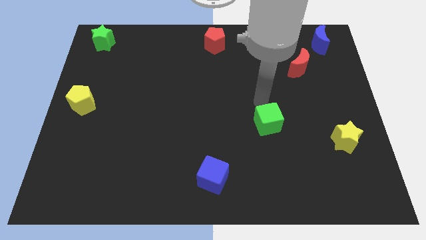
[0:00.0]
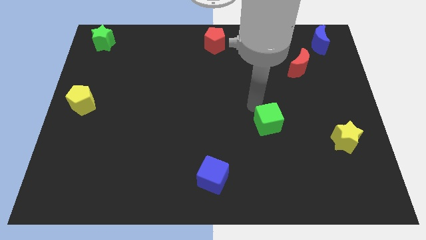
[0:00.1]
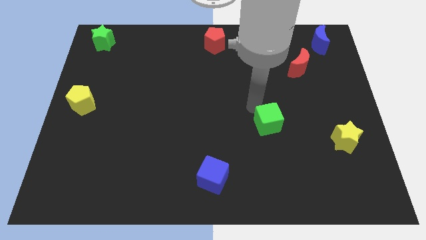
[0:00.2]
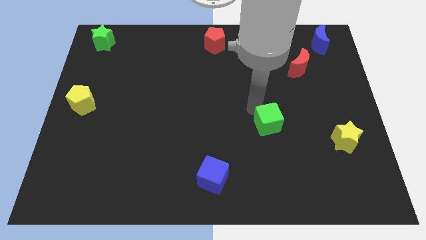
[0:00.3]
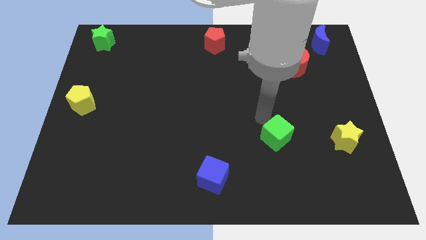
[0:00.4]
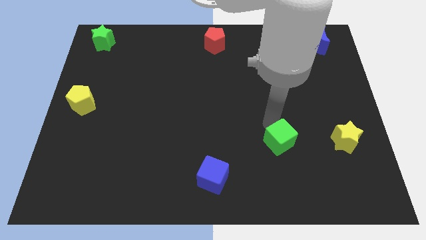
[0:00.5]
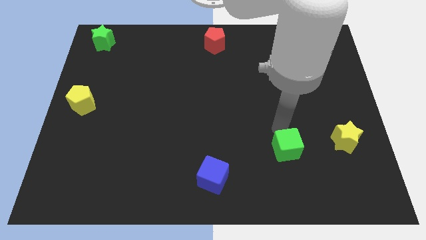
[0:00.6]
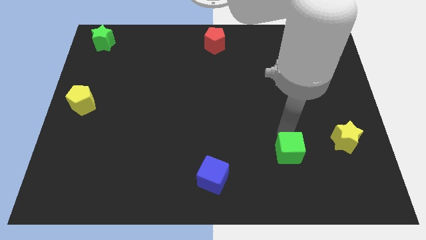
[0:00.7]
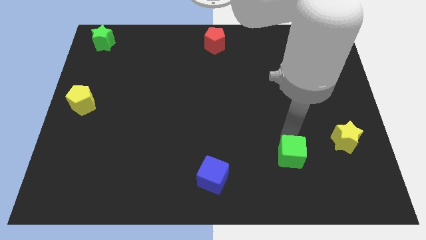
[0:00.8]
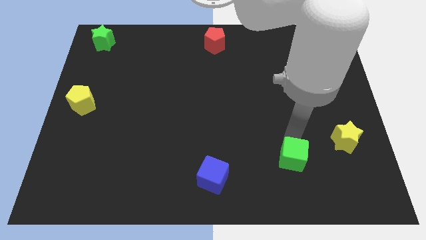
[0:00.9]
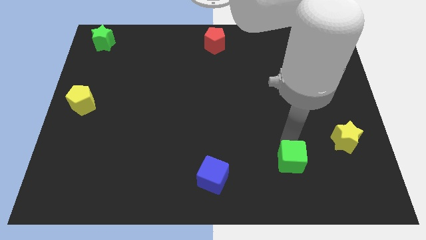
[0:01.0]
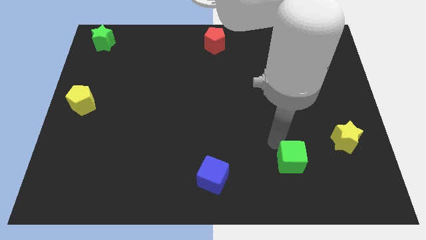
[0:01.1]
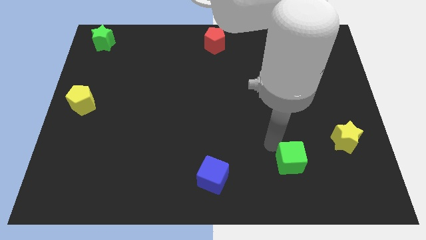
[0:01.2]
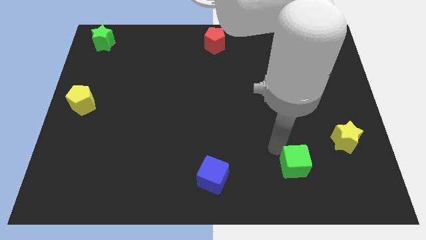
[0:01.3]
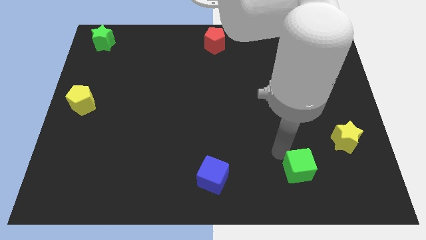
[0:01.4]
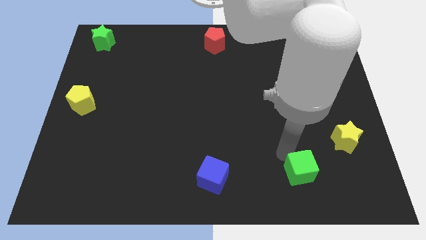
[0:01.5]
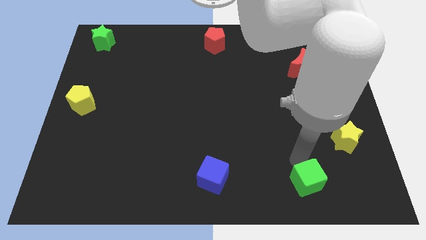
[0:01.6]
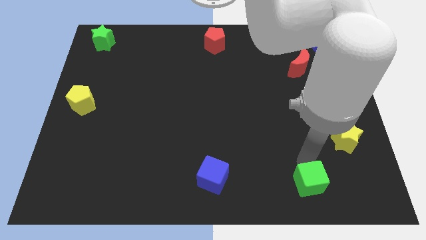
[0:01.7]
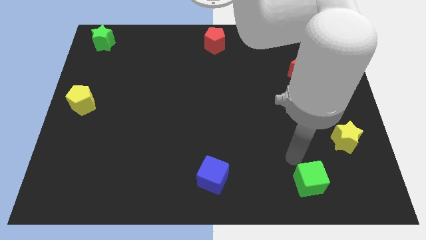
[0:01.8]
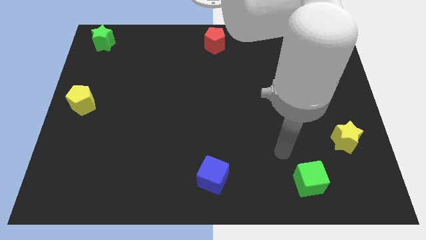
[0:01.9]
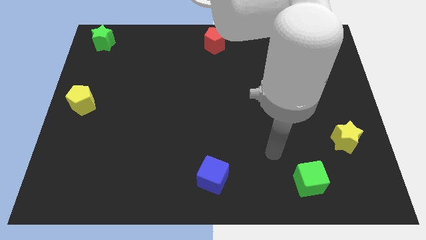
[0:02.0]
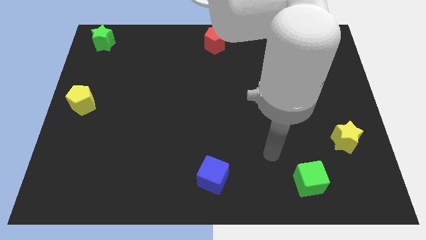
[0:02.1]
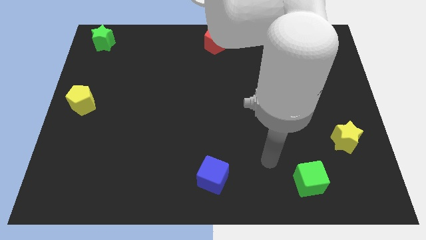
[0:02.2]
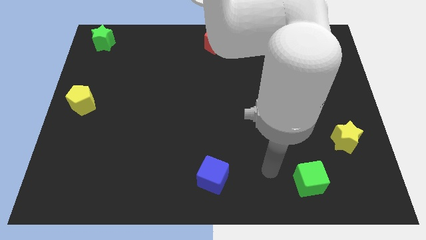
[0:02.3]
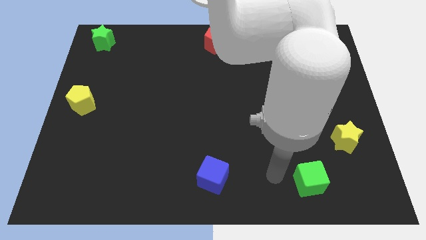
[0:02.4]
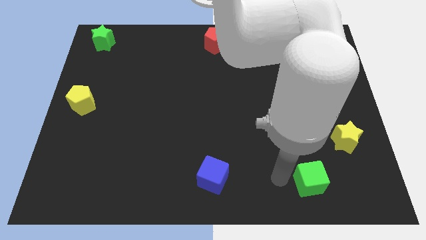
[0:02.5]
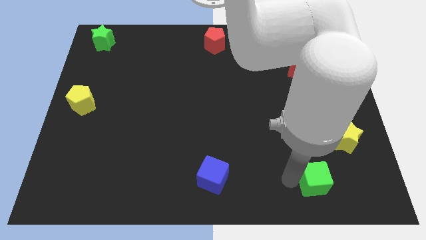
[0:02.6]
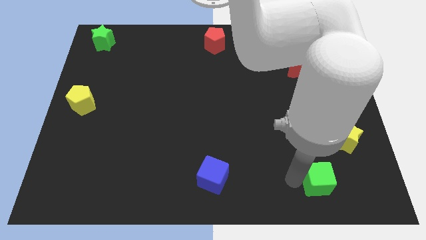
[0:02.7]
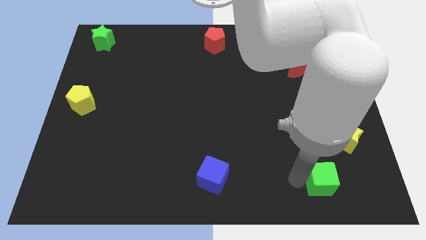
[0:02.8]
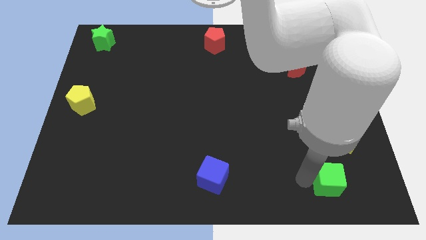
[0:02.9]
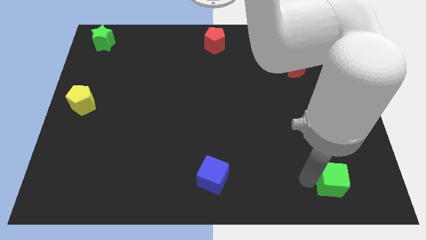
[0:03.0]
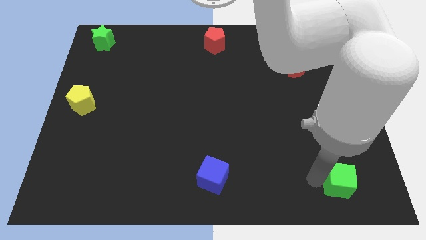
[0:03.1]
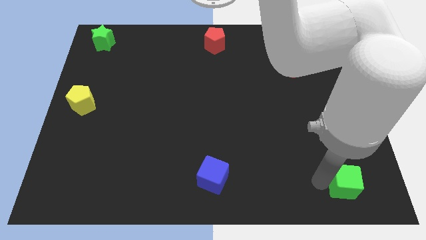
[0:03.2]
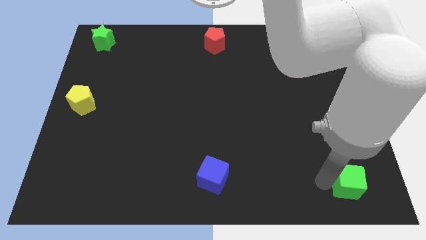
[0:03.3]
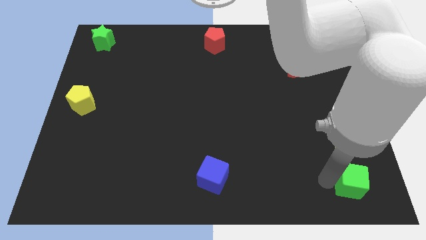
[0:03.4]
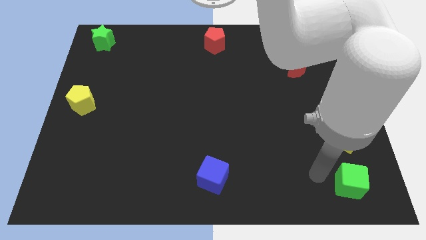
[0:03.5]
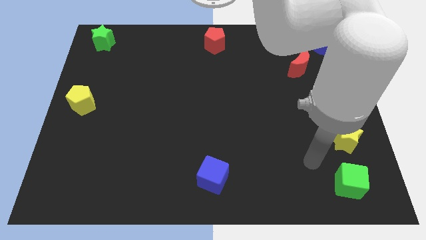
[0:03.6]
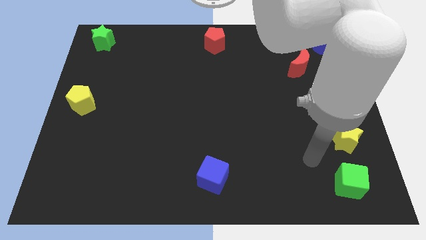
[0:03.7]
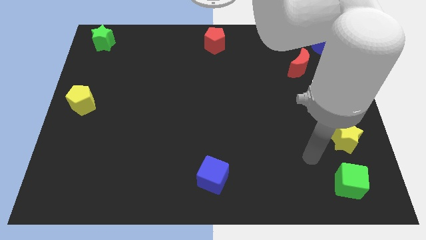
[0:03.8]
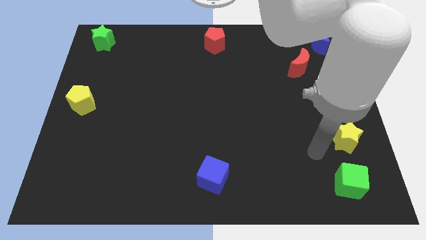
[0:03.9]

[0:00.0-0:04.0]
place the green cube below the yellow star

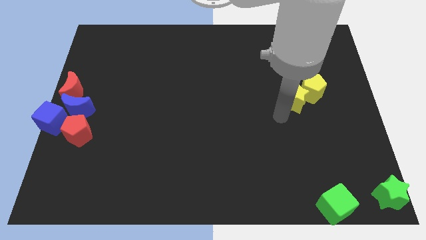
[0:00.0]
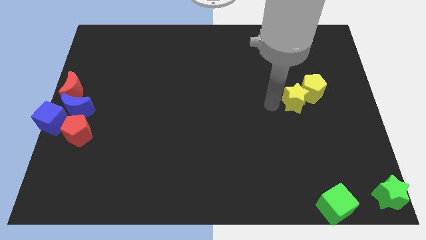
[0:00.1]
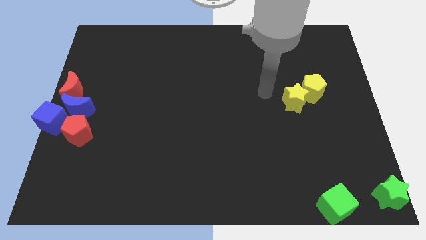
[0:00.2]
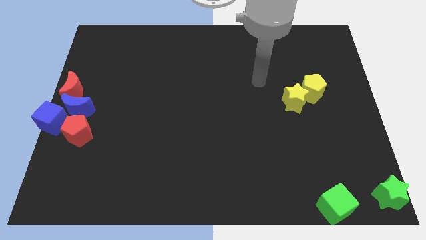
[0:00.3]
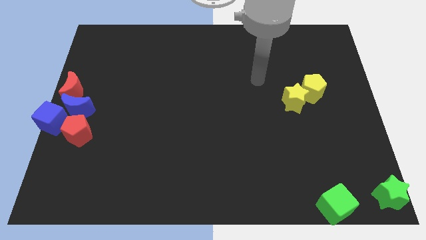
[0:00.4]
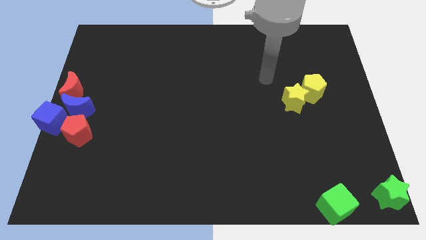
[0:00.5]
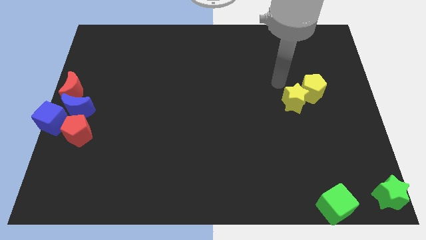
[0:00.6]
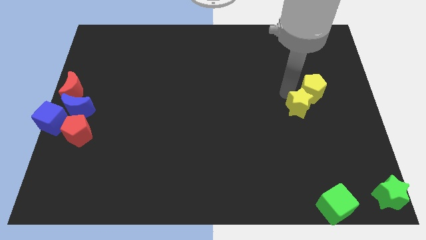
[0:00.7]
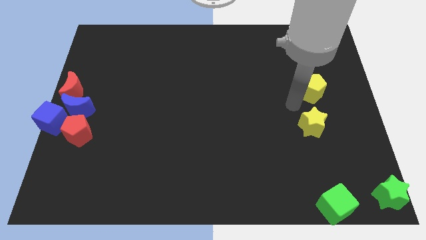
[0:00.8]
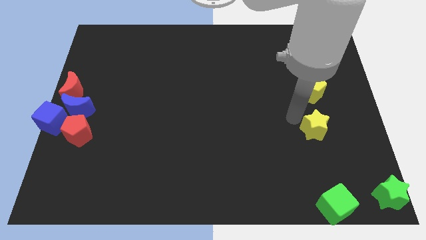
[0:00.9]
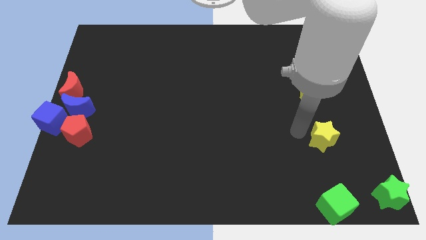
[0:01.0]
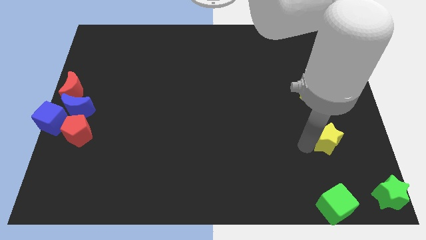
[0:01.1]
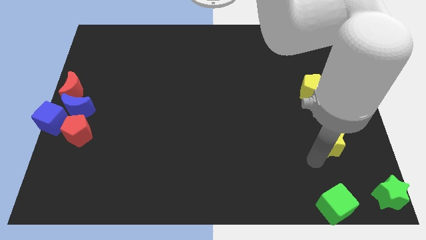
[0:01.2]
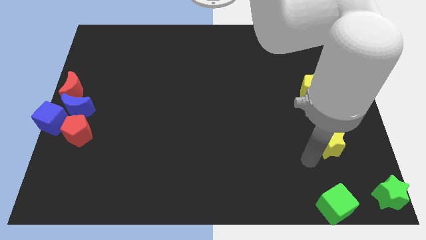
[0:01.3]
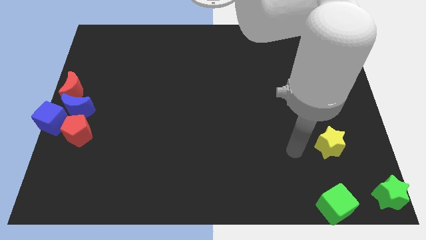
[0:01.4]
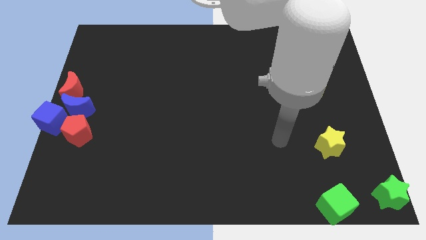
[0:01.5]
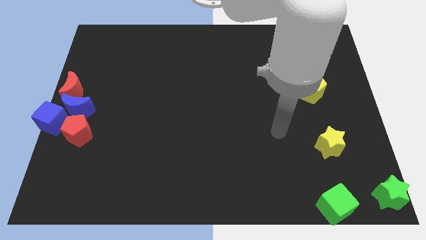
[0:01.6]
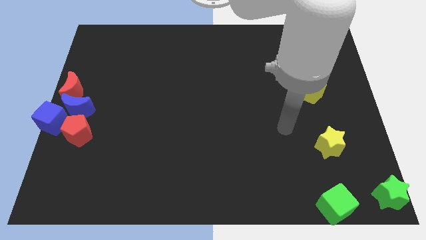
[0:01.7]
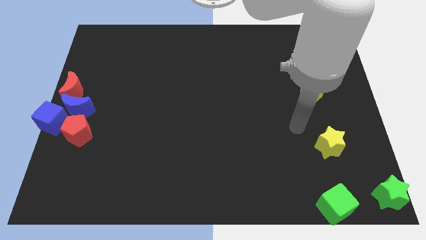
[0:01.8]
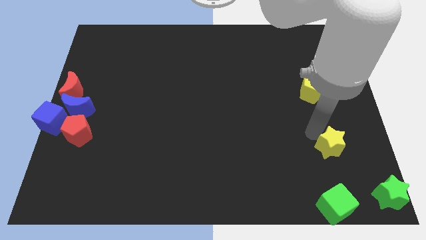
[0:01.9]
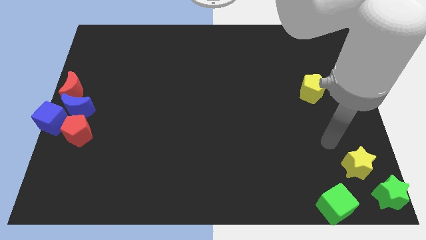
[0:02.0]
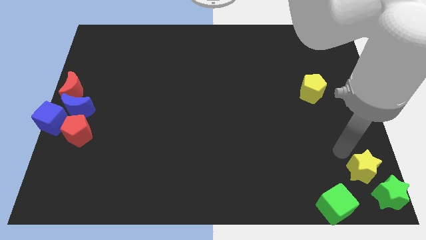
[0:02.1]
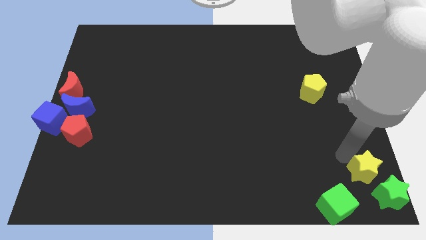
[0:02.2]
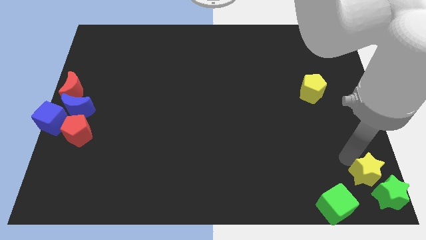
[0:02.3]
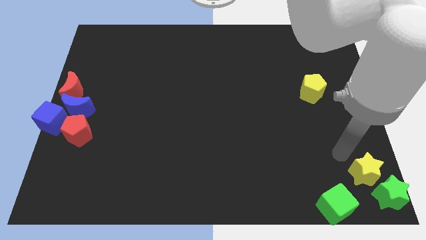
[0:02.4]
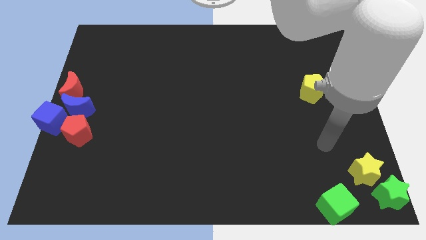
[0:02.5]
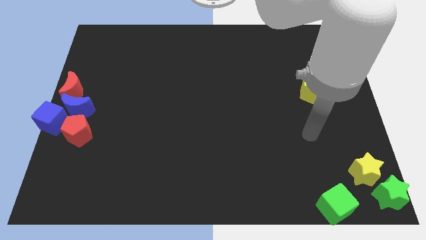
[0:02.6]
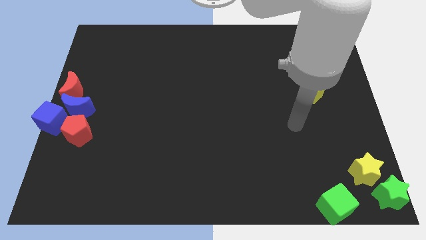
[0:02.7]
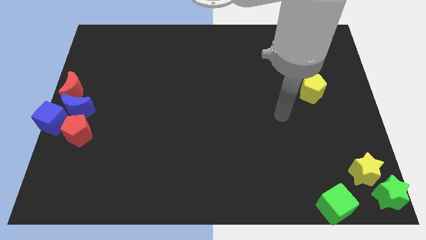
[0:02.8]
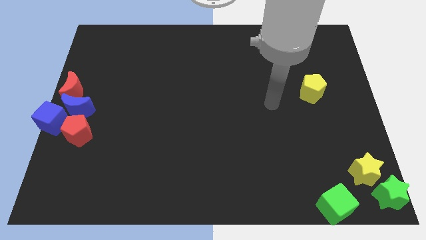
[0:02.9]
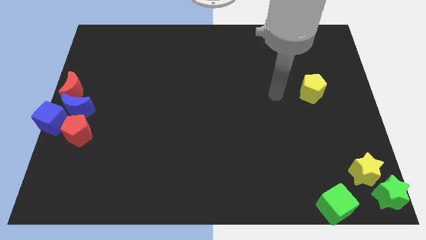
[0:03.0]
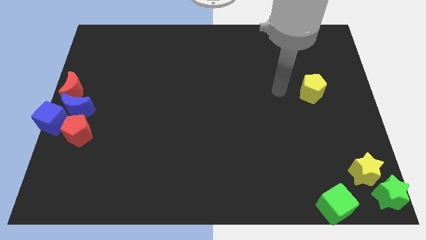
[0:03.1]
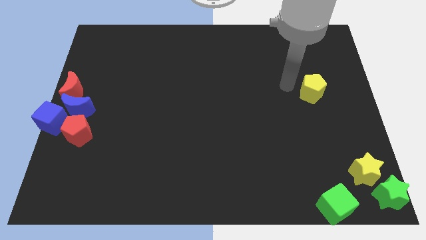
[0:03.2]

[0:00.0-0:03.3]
slide the yellow star close to the green star

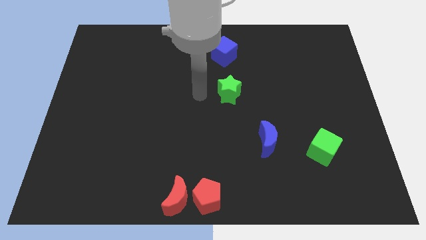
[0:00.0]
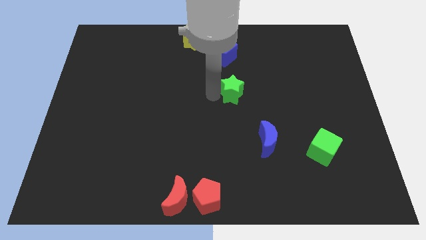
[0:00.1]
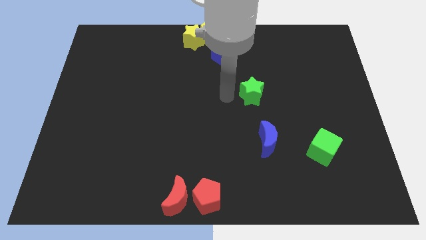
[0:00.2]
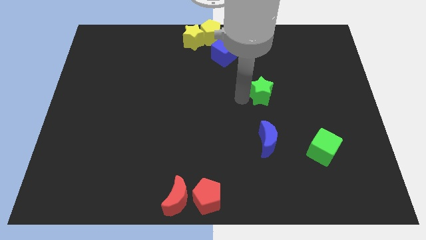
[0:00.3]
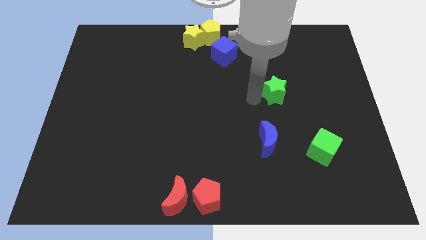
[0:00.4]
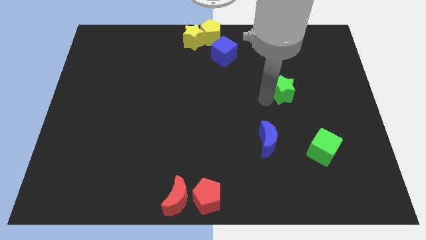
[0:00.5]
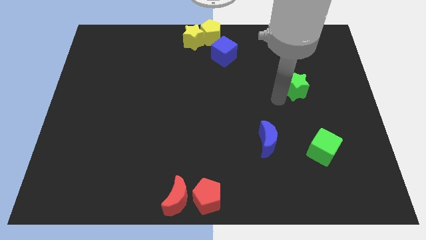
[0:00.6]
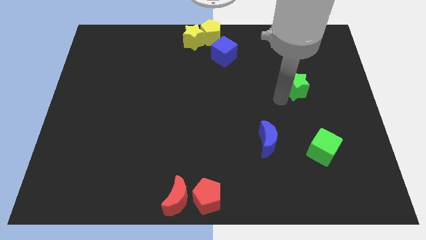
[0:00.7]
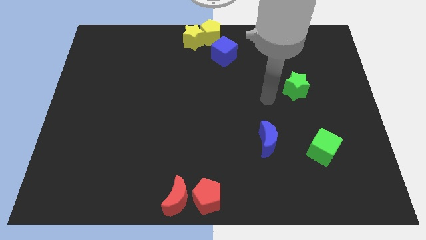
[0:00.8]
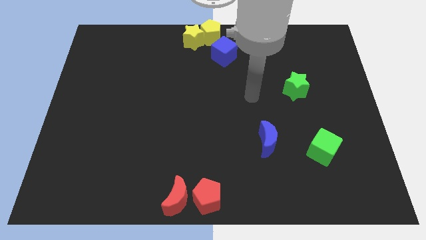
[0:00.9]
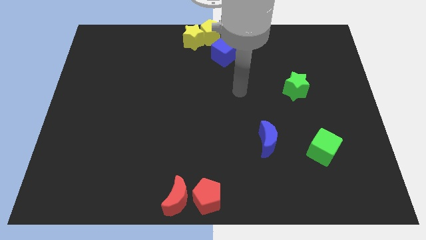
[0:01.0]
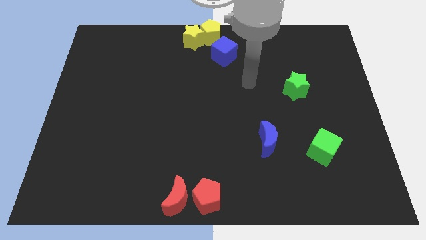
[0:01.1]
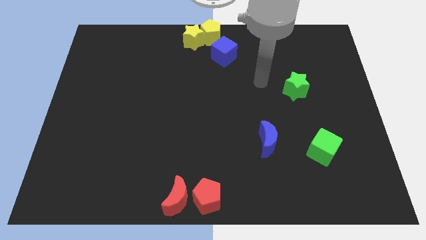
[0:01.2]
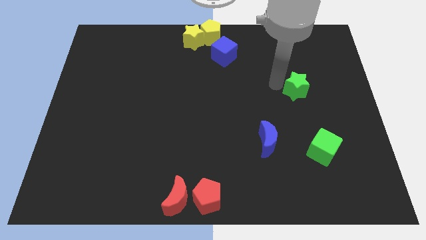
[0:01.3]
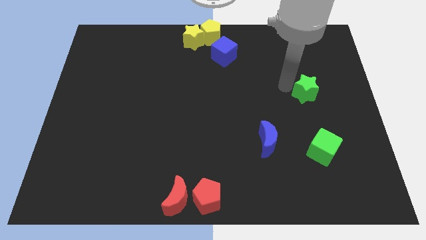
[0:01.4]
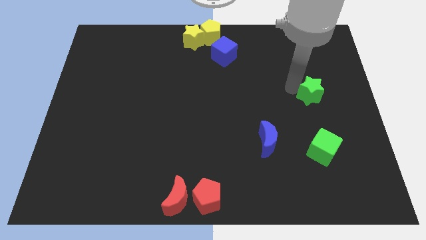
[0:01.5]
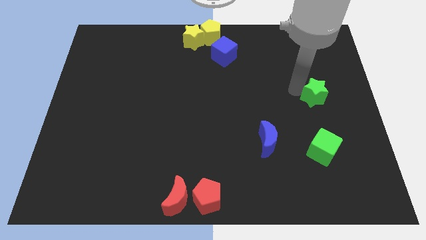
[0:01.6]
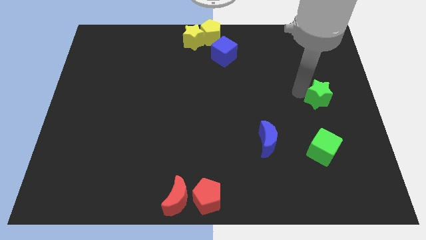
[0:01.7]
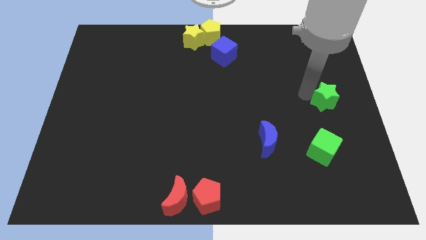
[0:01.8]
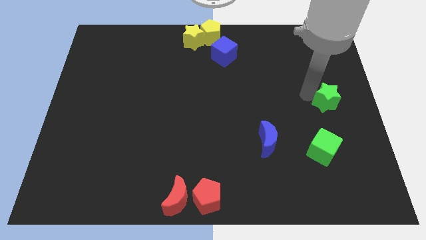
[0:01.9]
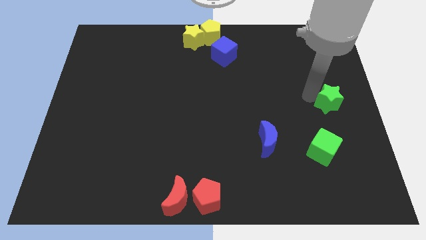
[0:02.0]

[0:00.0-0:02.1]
push the green star towards the center right of the board
